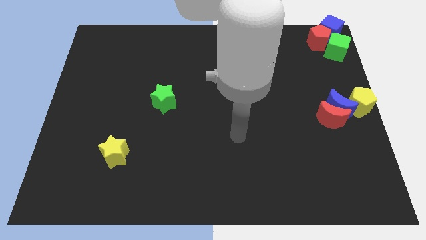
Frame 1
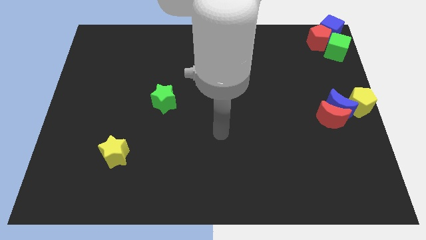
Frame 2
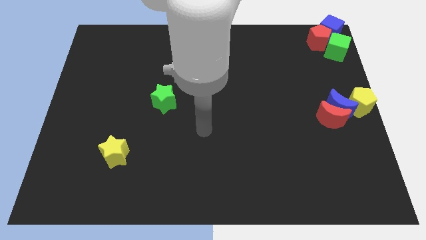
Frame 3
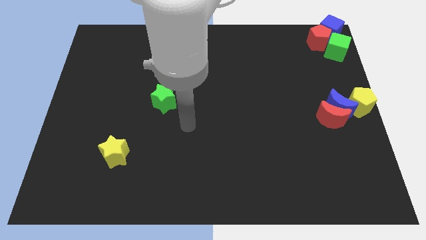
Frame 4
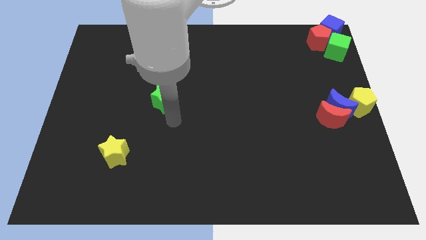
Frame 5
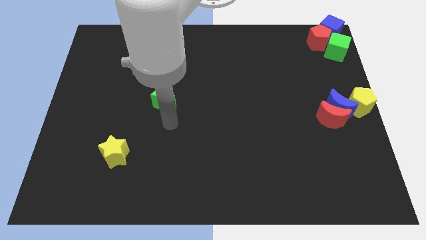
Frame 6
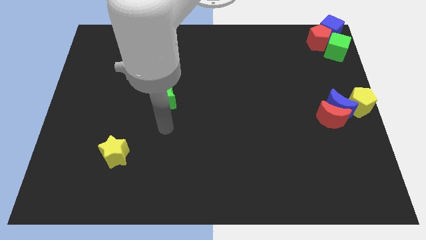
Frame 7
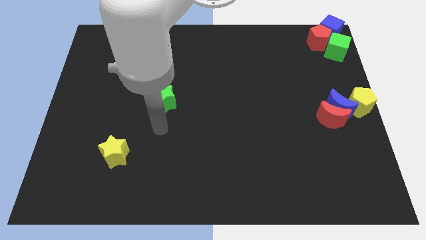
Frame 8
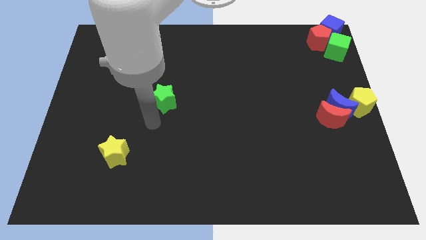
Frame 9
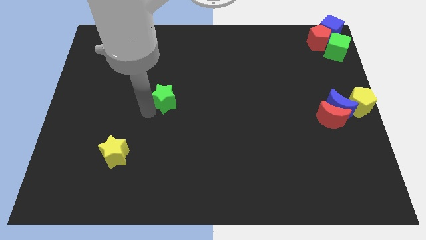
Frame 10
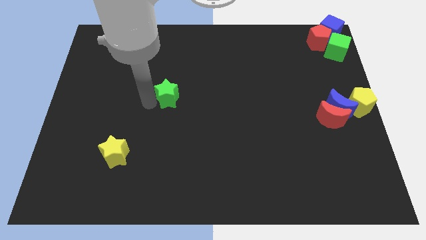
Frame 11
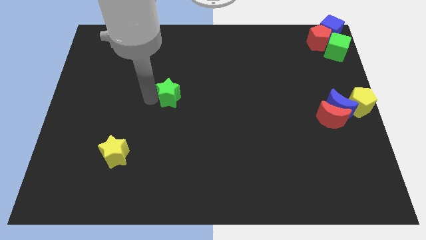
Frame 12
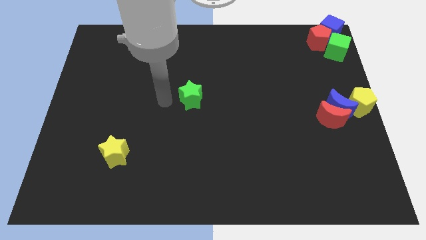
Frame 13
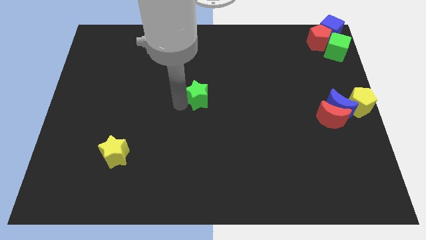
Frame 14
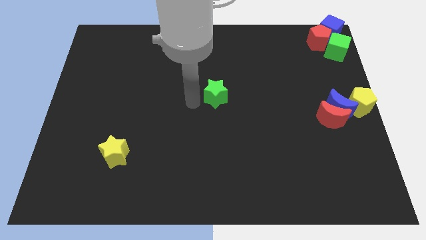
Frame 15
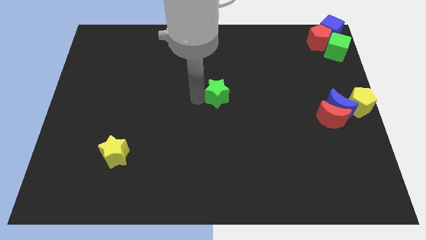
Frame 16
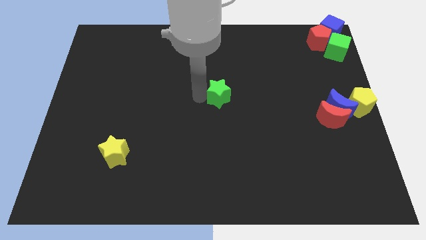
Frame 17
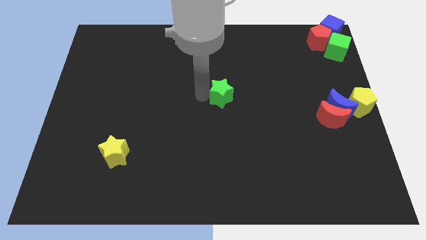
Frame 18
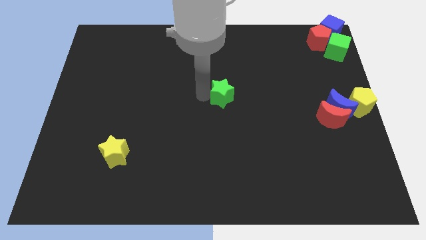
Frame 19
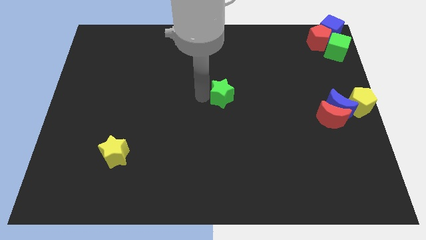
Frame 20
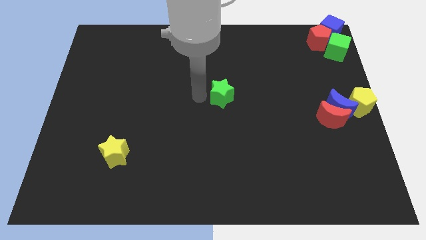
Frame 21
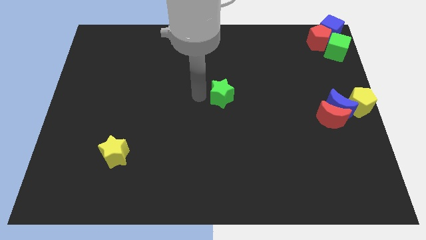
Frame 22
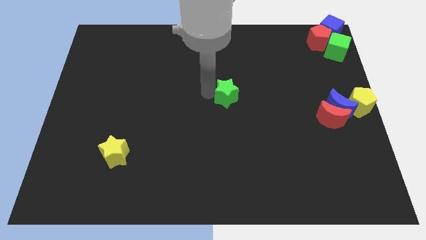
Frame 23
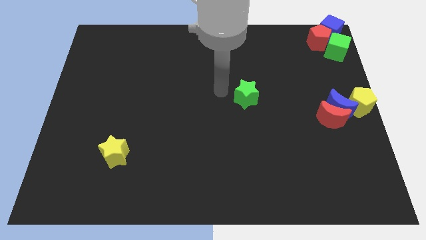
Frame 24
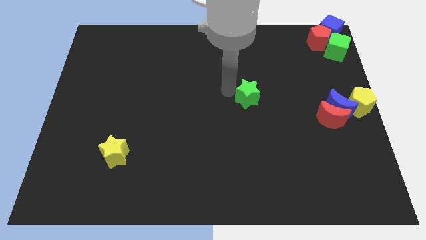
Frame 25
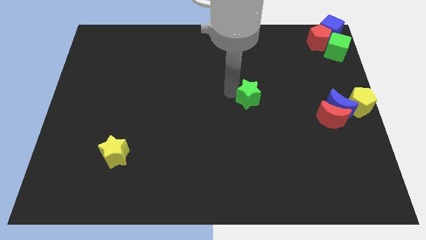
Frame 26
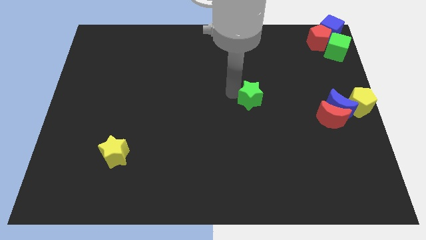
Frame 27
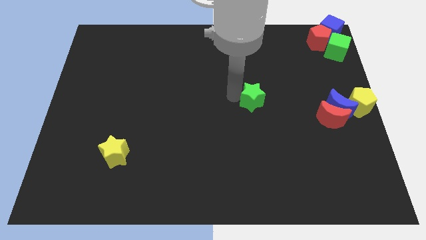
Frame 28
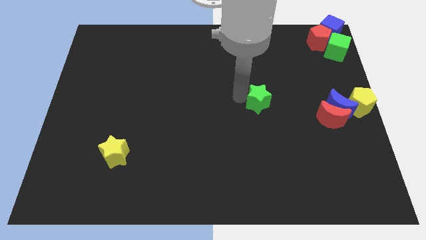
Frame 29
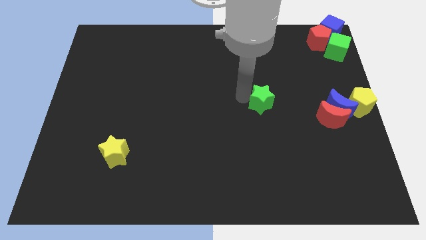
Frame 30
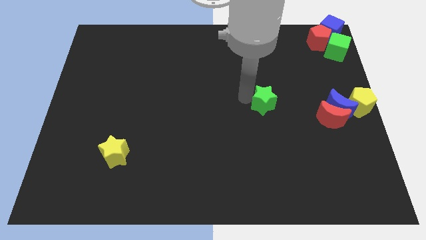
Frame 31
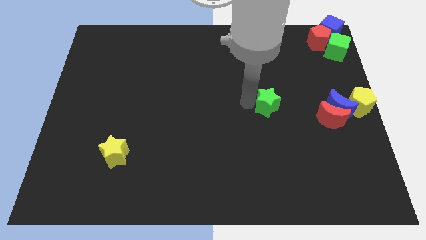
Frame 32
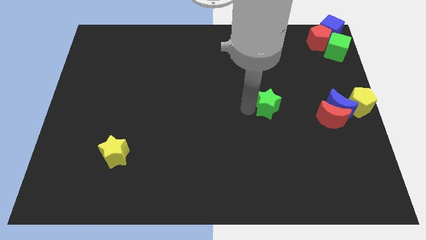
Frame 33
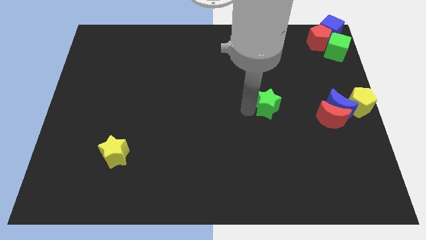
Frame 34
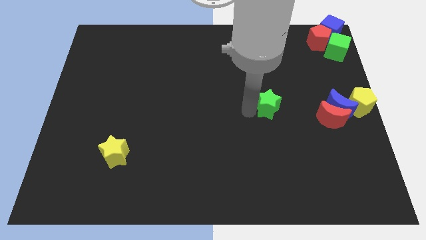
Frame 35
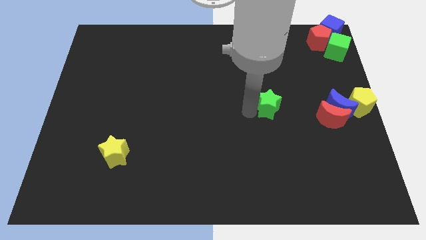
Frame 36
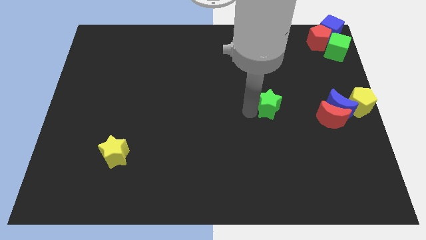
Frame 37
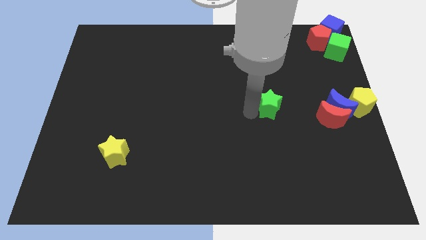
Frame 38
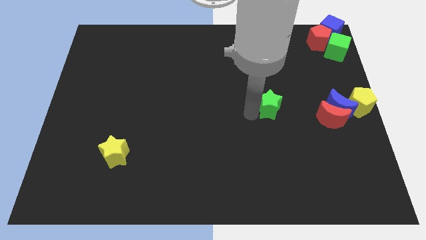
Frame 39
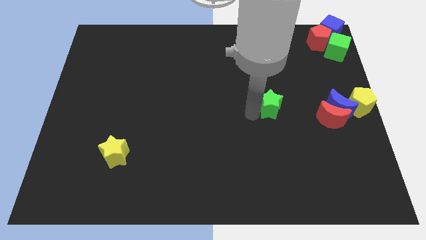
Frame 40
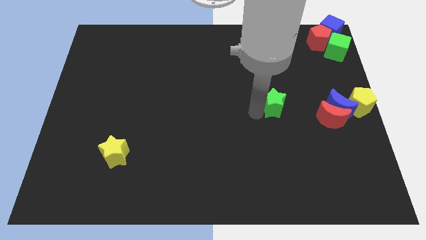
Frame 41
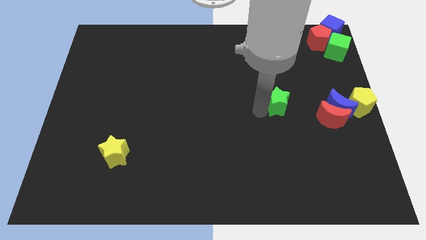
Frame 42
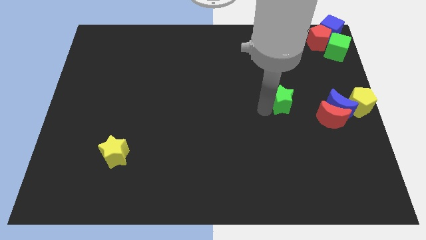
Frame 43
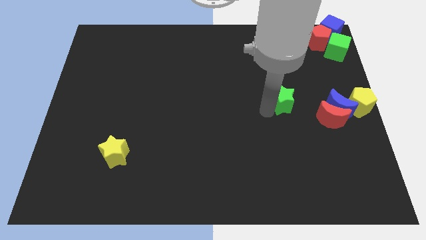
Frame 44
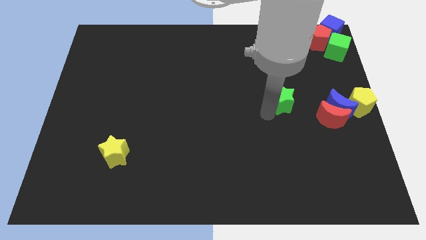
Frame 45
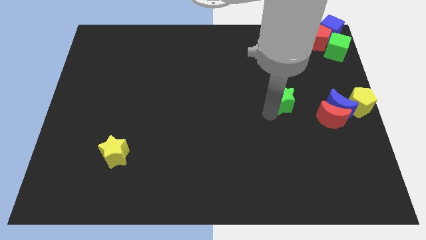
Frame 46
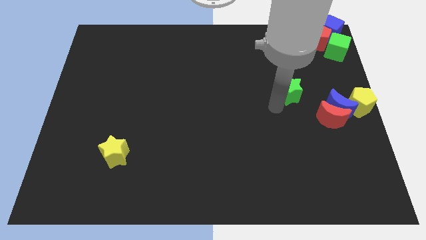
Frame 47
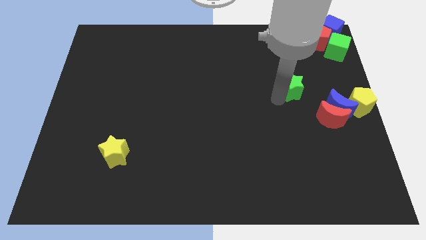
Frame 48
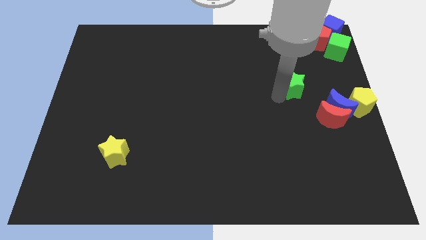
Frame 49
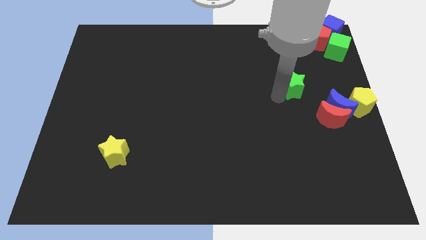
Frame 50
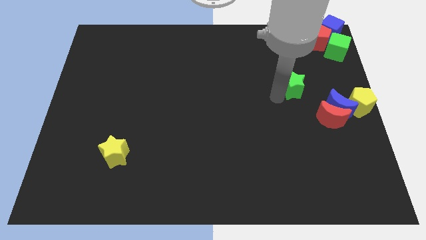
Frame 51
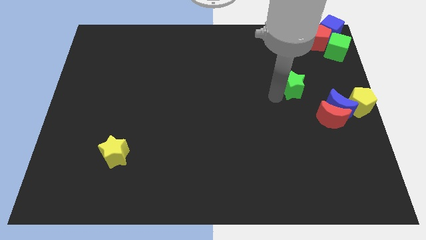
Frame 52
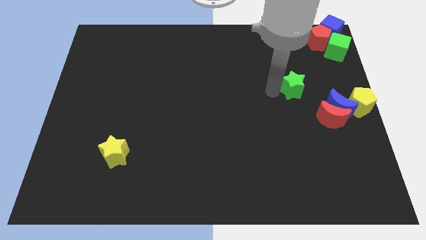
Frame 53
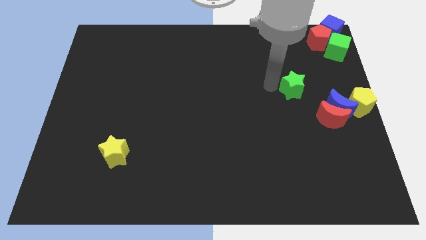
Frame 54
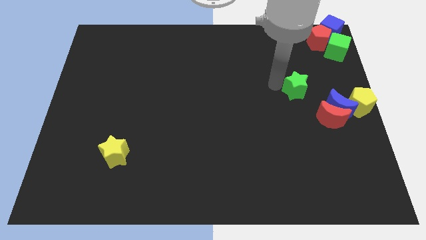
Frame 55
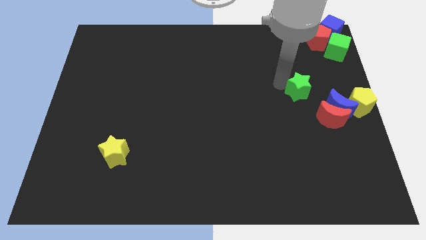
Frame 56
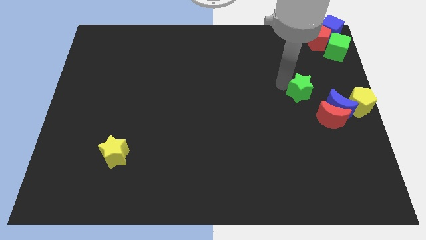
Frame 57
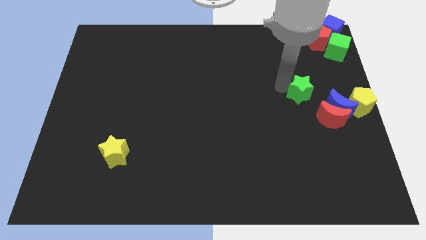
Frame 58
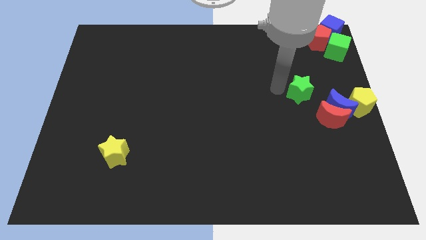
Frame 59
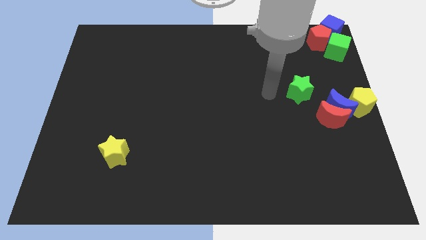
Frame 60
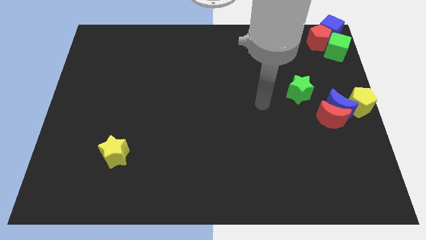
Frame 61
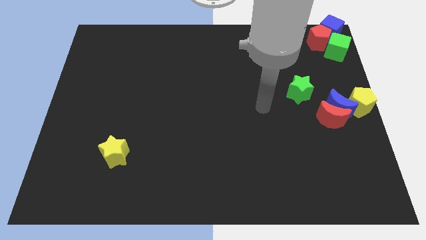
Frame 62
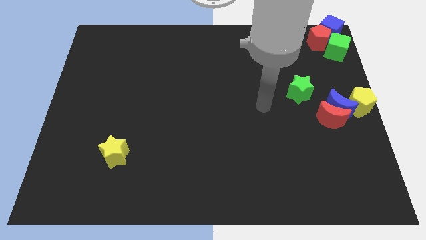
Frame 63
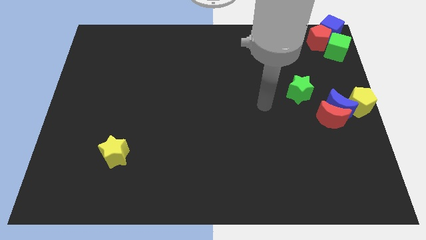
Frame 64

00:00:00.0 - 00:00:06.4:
move green star diagonally above the red and blue moon

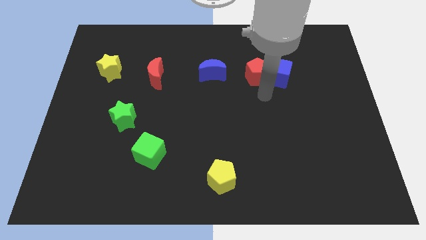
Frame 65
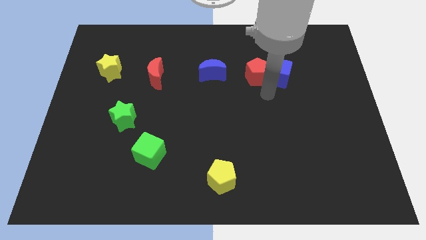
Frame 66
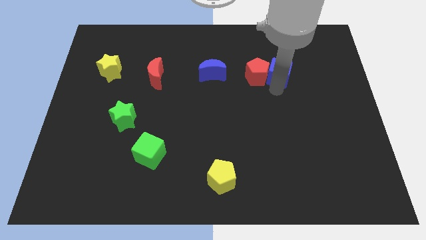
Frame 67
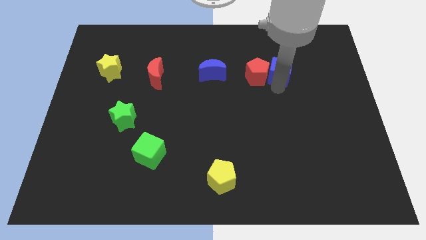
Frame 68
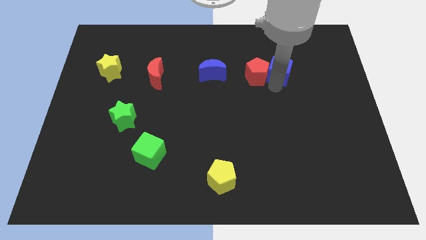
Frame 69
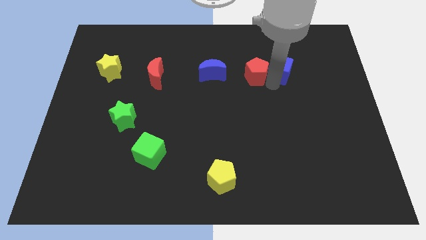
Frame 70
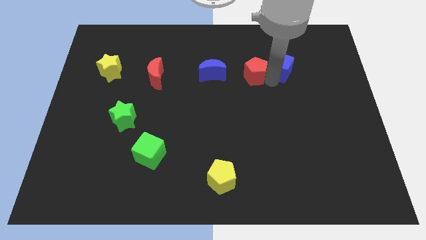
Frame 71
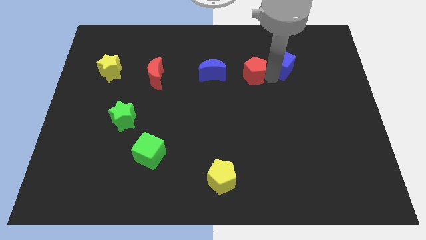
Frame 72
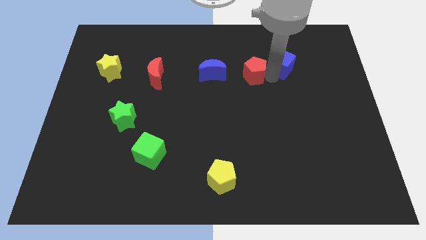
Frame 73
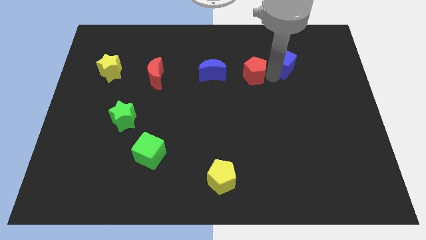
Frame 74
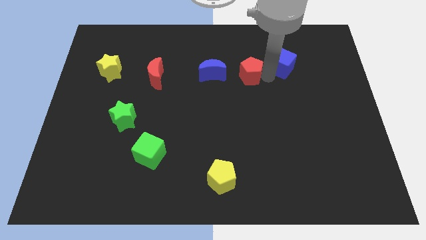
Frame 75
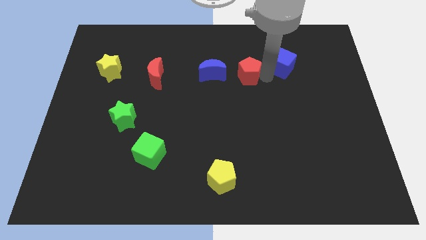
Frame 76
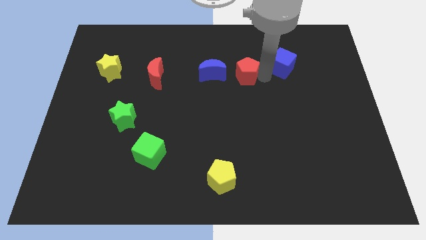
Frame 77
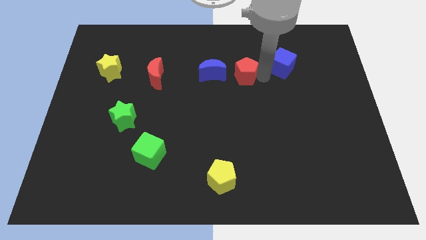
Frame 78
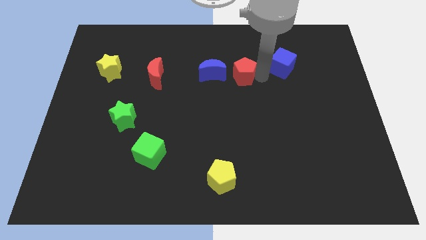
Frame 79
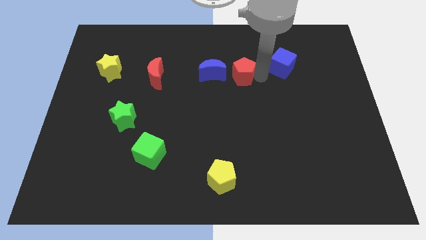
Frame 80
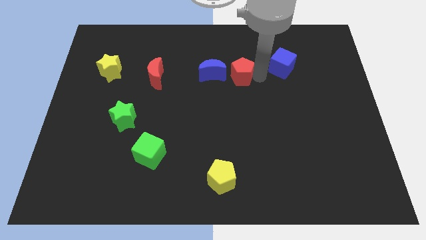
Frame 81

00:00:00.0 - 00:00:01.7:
move the red pentagon to the right side of the blue crescent

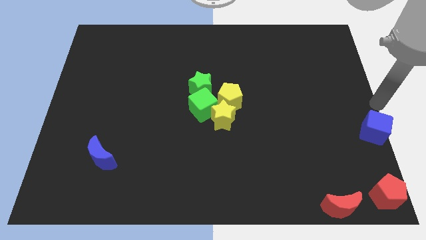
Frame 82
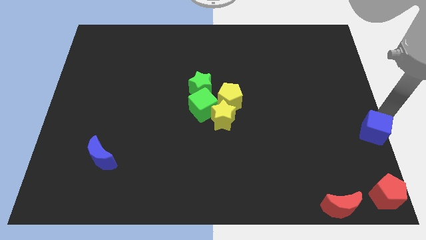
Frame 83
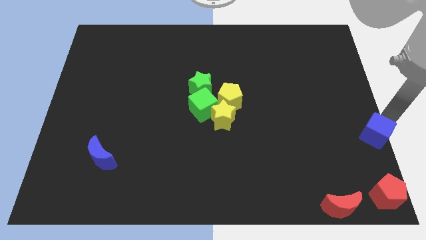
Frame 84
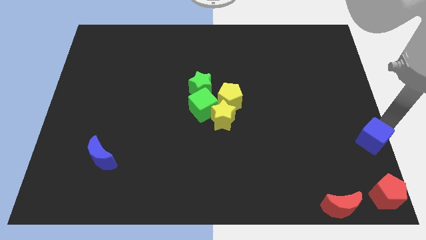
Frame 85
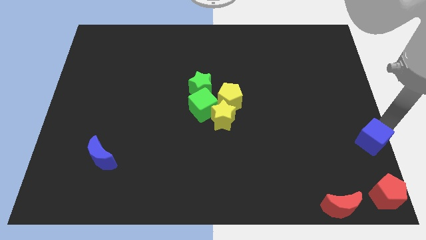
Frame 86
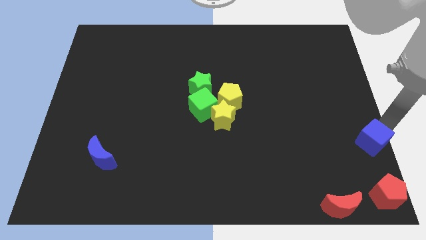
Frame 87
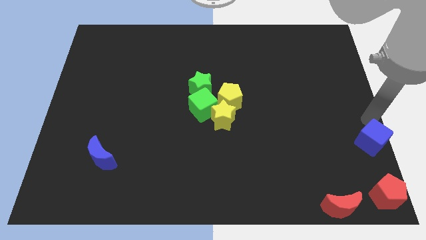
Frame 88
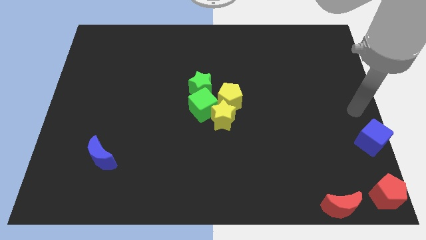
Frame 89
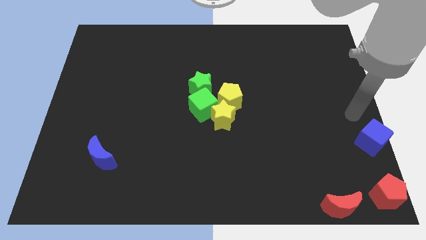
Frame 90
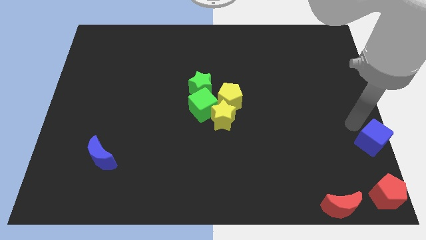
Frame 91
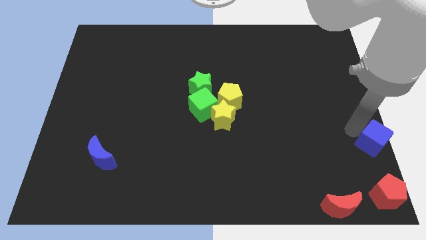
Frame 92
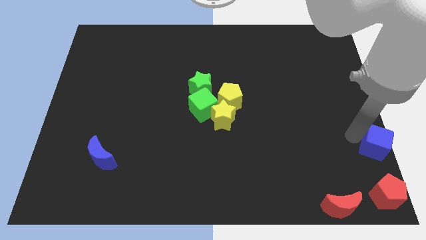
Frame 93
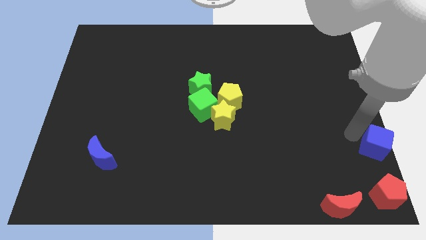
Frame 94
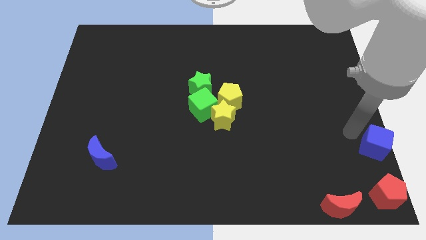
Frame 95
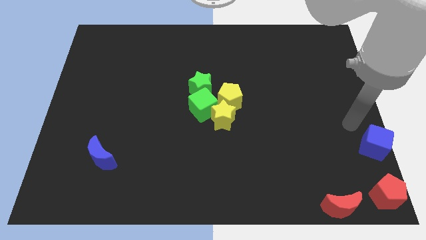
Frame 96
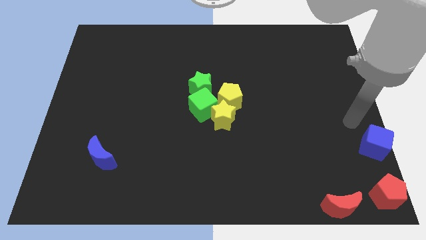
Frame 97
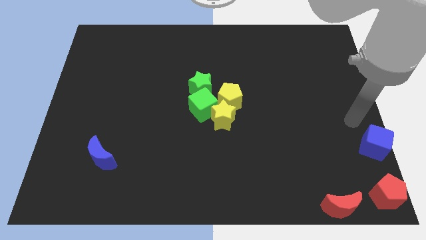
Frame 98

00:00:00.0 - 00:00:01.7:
push the blue cube vertical to the red pentagon
